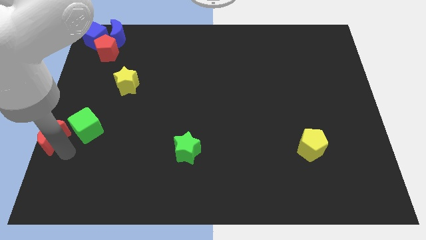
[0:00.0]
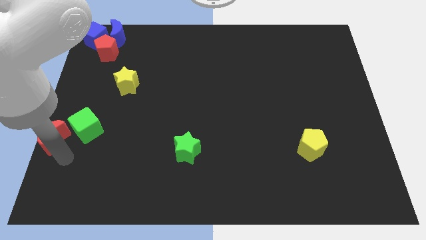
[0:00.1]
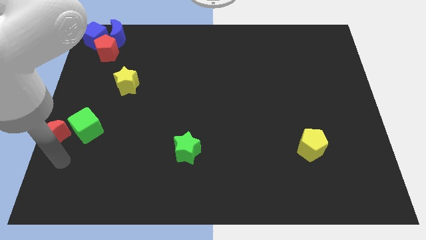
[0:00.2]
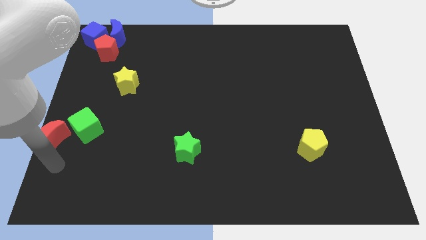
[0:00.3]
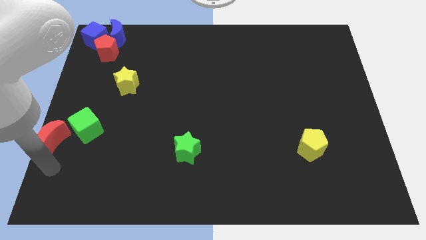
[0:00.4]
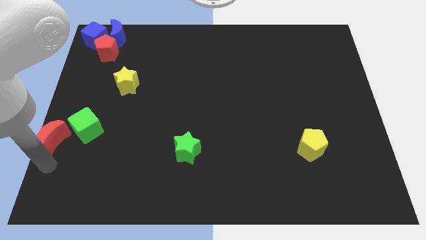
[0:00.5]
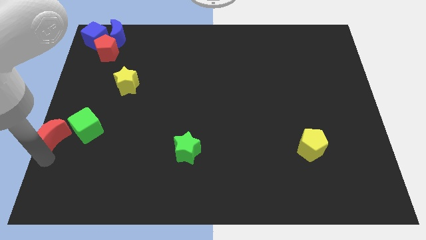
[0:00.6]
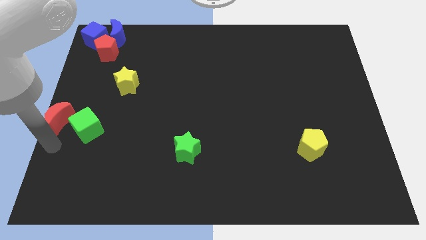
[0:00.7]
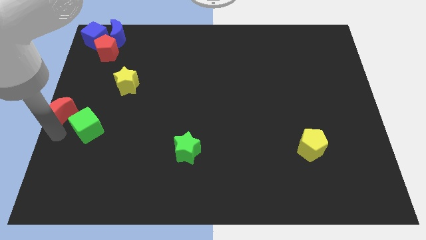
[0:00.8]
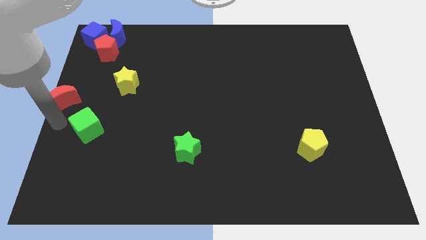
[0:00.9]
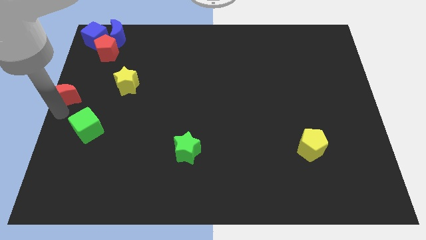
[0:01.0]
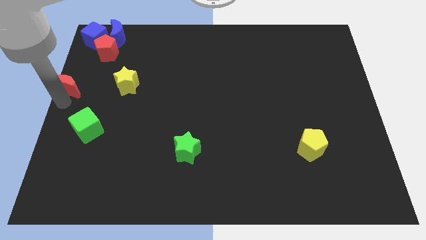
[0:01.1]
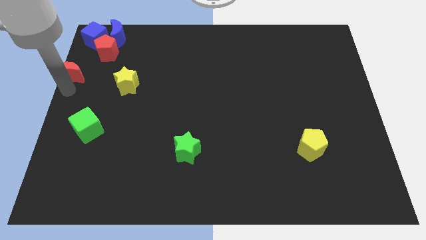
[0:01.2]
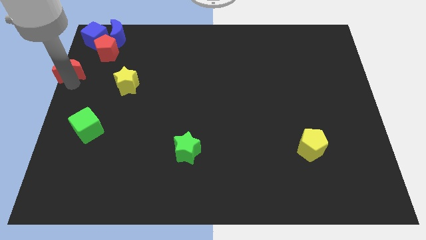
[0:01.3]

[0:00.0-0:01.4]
move the red crescent to the top of the board

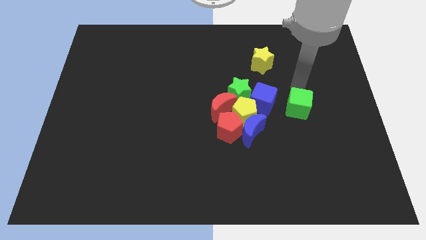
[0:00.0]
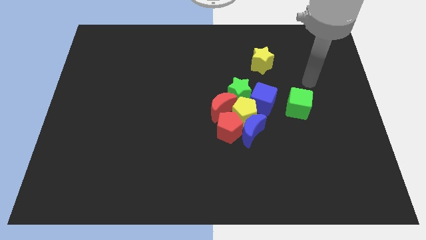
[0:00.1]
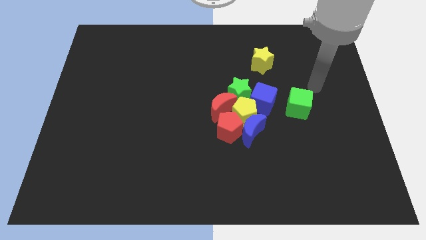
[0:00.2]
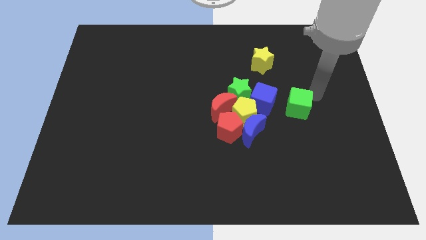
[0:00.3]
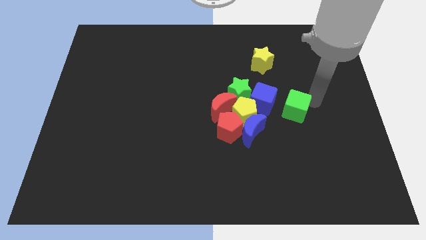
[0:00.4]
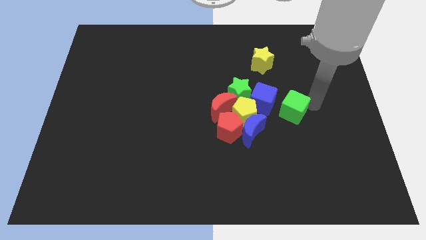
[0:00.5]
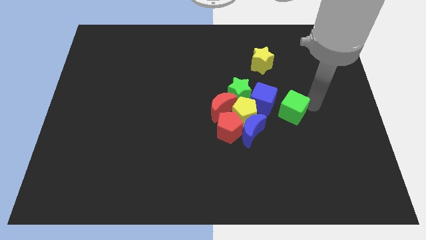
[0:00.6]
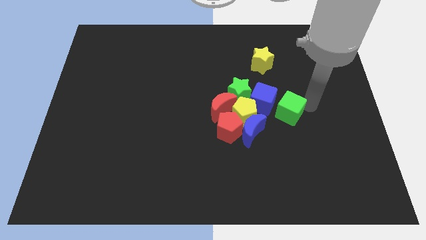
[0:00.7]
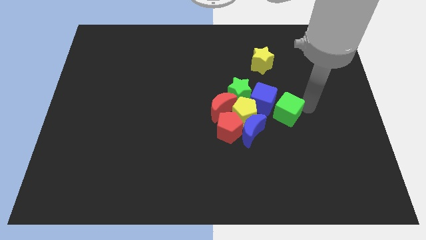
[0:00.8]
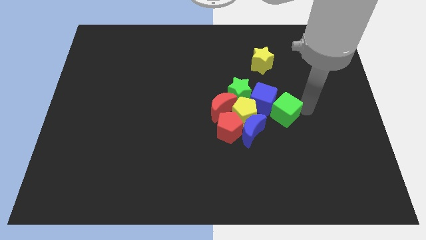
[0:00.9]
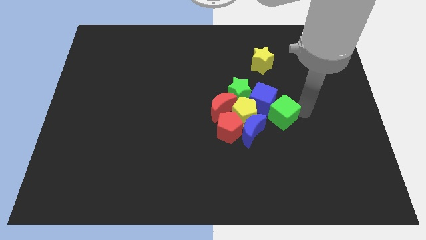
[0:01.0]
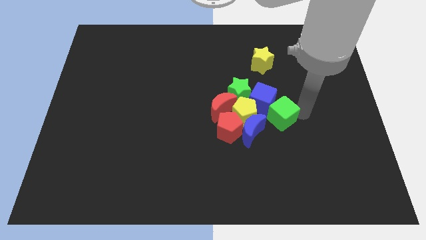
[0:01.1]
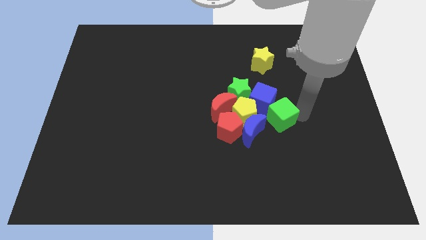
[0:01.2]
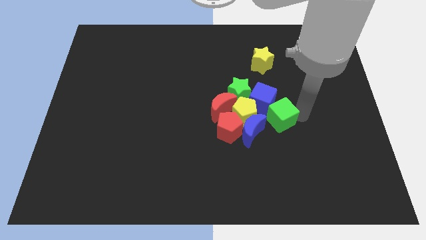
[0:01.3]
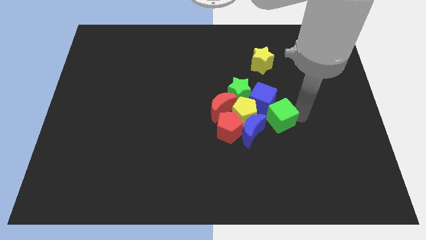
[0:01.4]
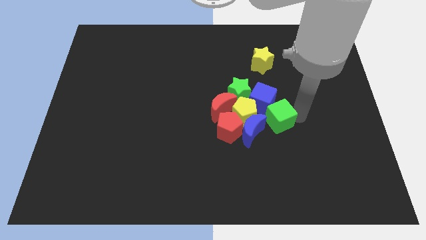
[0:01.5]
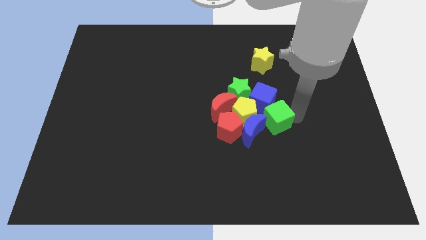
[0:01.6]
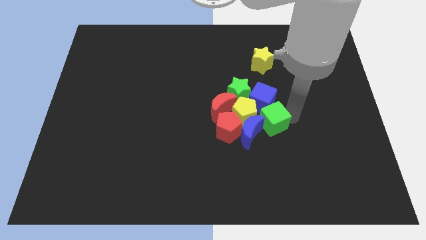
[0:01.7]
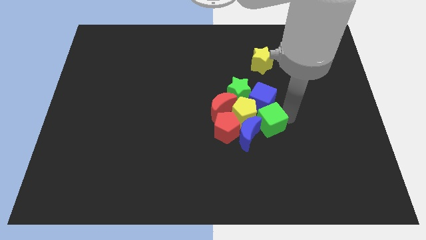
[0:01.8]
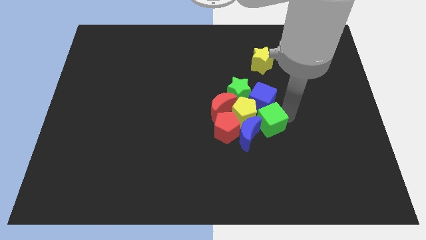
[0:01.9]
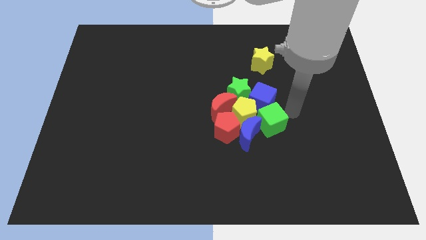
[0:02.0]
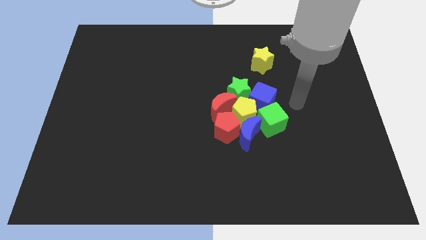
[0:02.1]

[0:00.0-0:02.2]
place the green cube in between the blue blocks

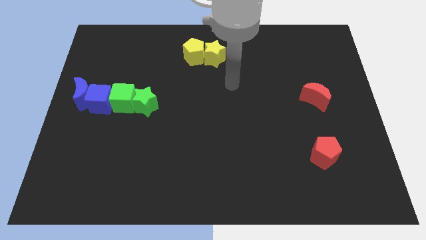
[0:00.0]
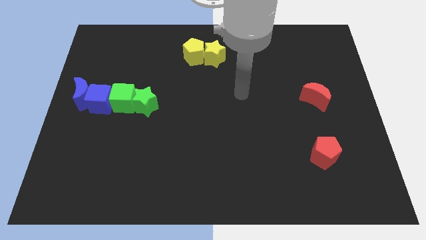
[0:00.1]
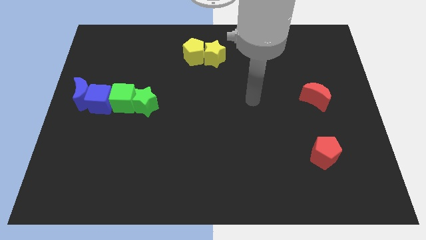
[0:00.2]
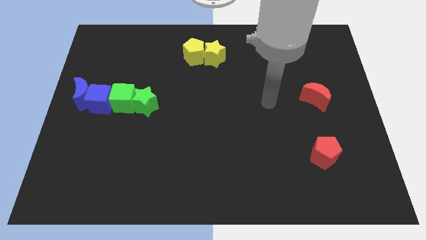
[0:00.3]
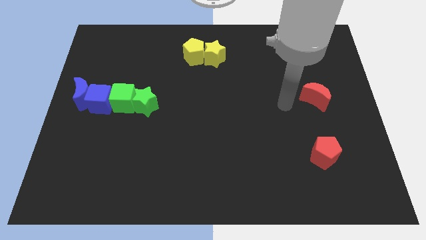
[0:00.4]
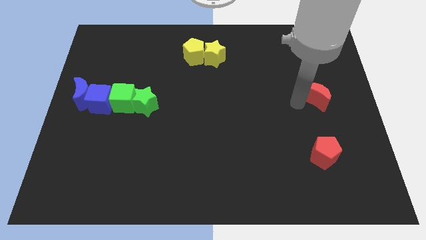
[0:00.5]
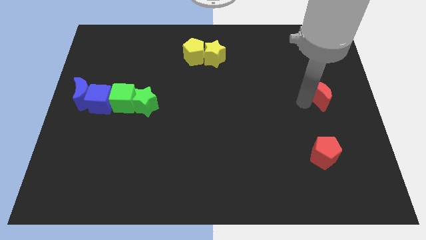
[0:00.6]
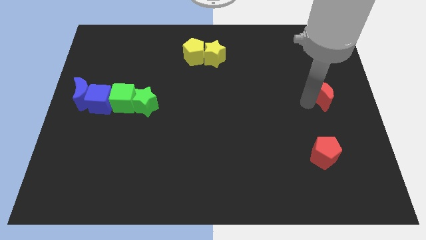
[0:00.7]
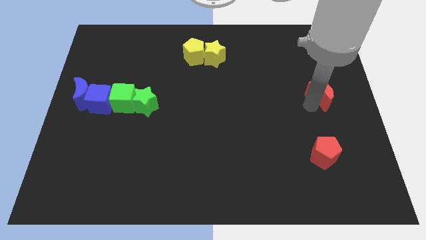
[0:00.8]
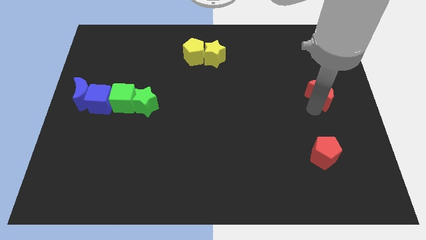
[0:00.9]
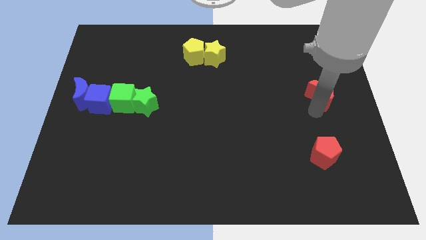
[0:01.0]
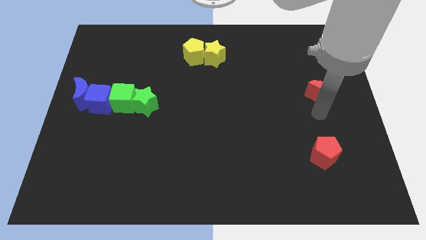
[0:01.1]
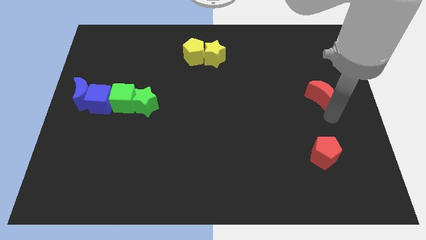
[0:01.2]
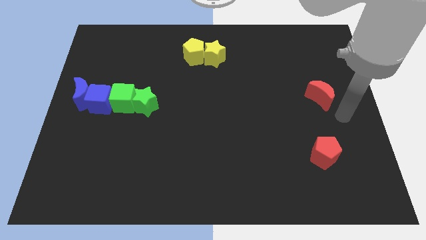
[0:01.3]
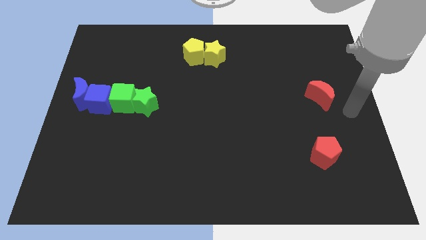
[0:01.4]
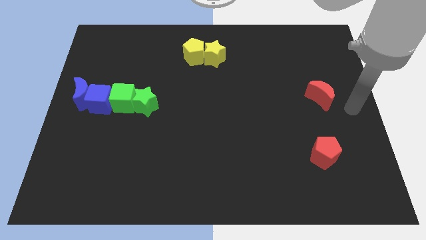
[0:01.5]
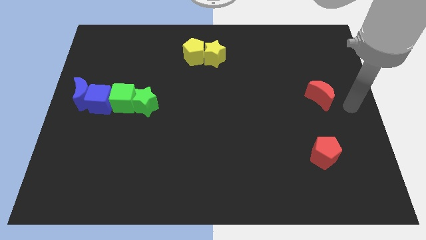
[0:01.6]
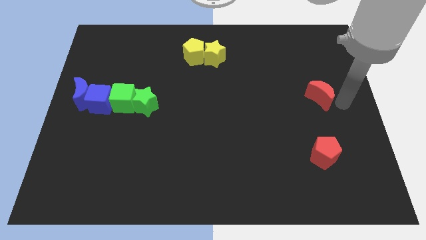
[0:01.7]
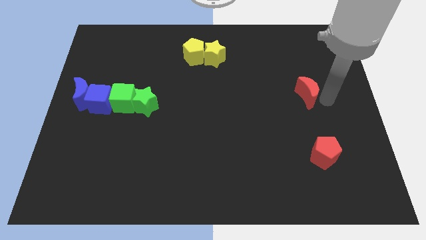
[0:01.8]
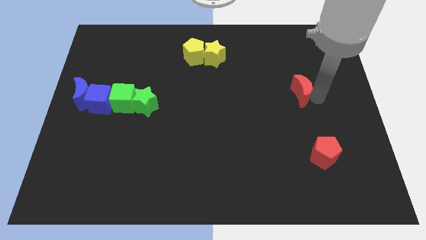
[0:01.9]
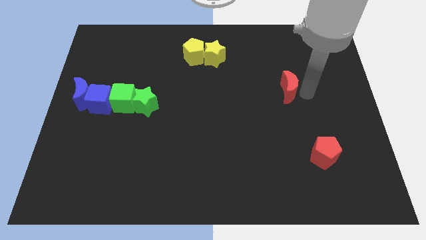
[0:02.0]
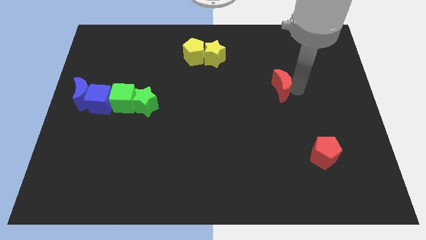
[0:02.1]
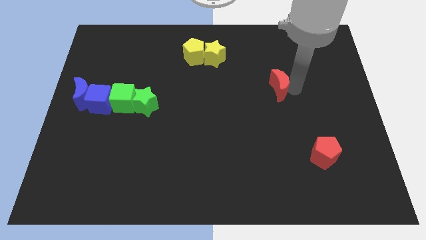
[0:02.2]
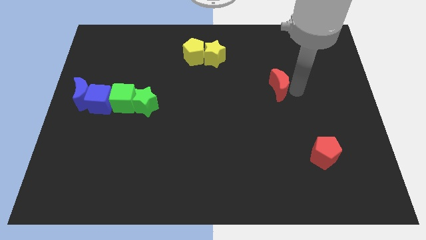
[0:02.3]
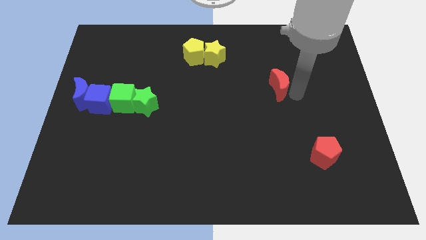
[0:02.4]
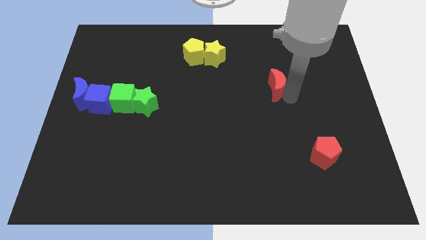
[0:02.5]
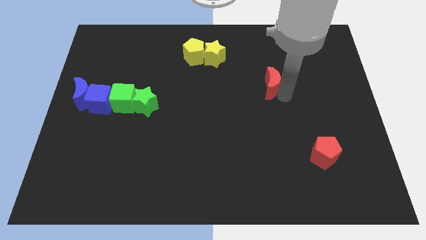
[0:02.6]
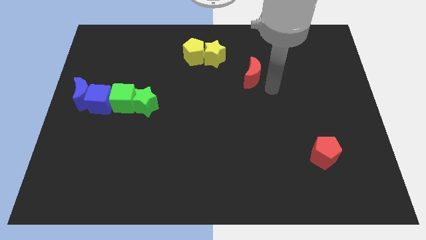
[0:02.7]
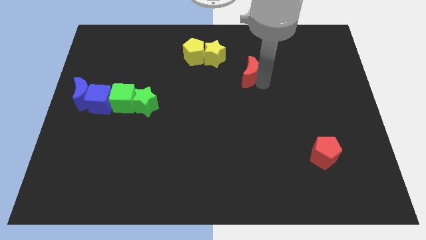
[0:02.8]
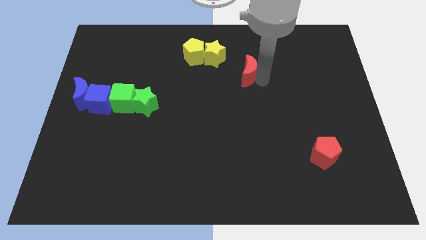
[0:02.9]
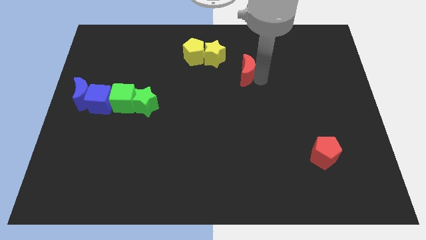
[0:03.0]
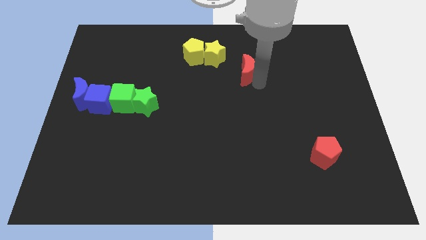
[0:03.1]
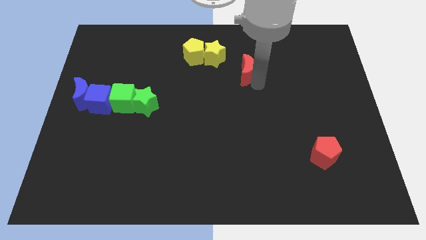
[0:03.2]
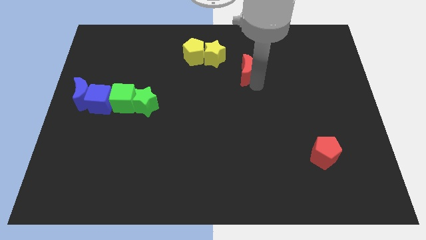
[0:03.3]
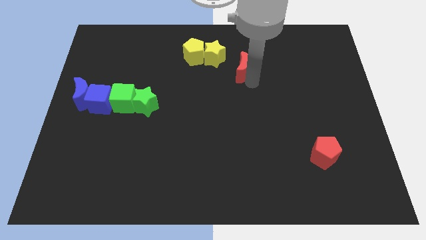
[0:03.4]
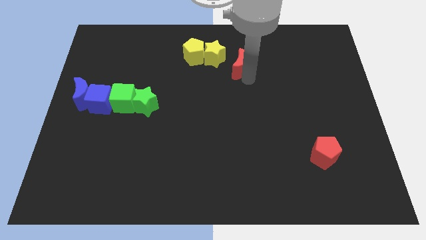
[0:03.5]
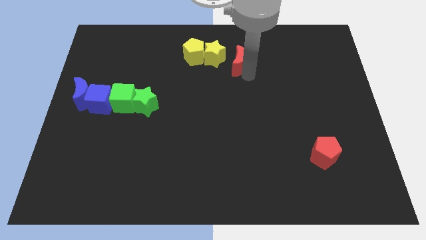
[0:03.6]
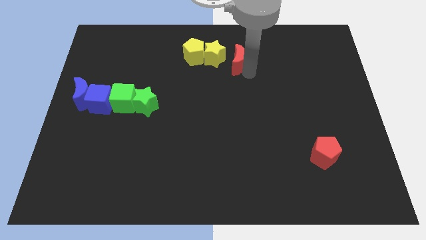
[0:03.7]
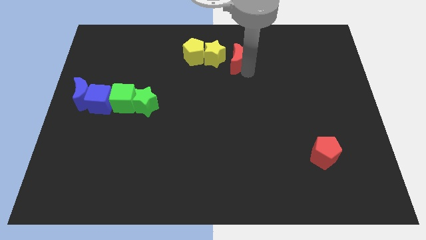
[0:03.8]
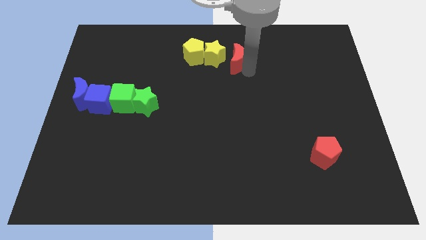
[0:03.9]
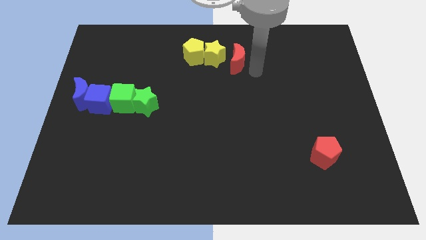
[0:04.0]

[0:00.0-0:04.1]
push red moon towards yellow star

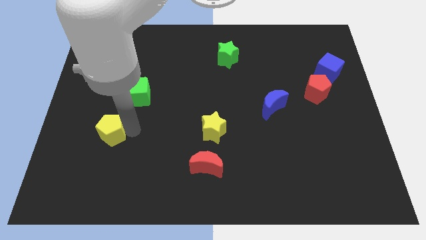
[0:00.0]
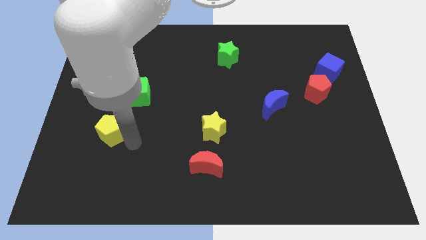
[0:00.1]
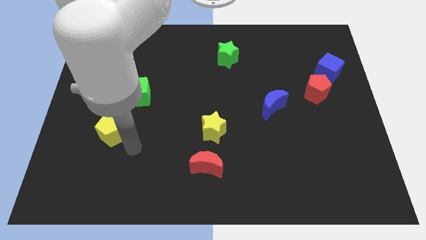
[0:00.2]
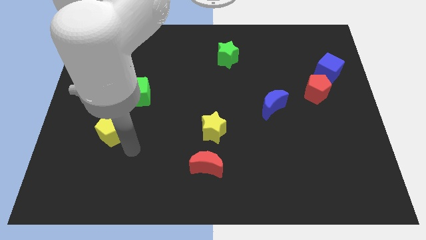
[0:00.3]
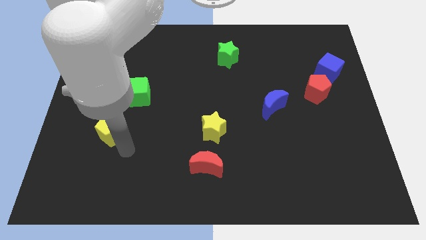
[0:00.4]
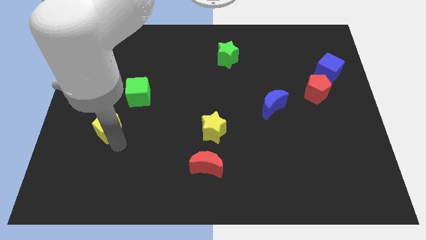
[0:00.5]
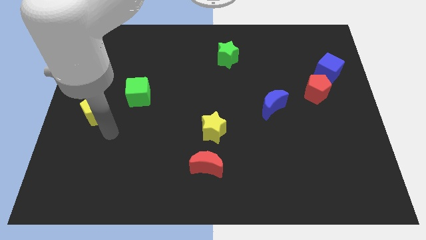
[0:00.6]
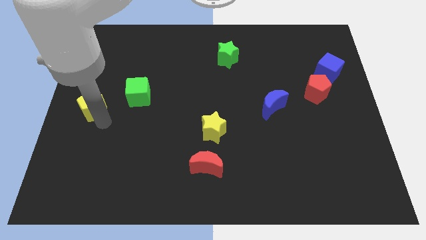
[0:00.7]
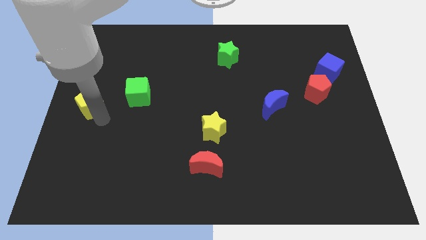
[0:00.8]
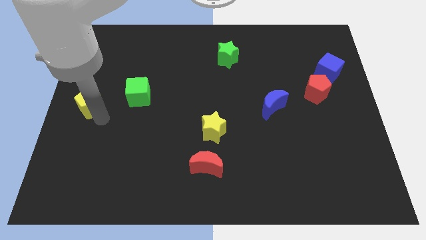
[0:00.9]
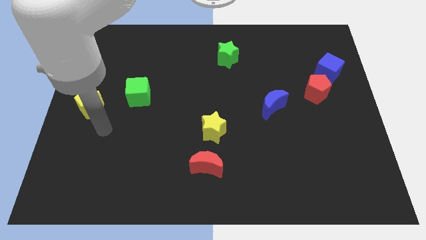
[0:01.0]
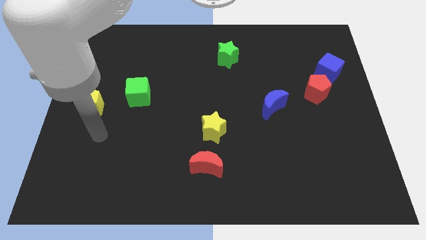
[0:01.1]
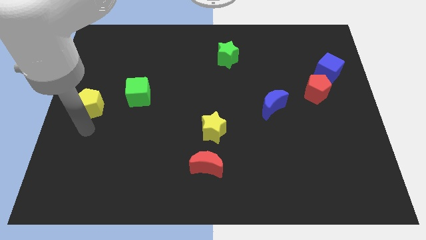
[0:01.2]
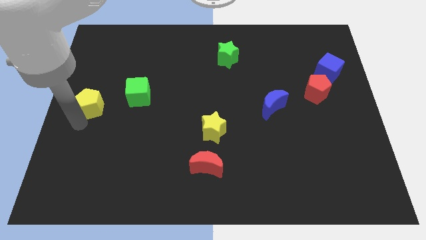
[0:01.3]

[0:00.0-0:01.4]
move the yellow pentagon to the left center to the green cube

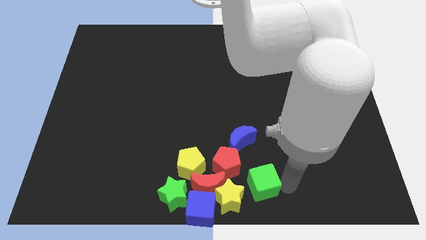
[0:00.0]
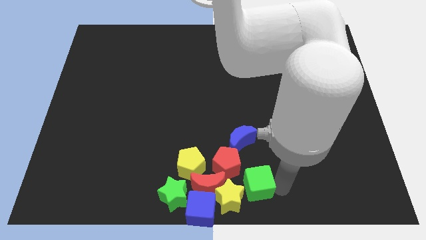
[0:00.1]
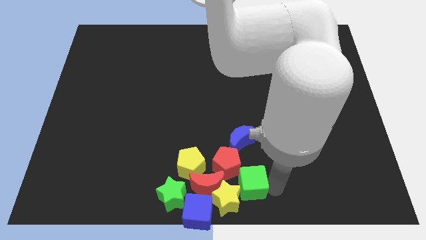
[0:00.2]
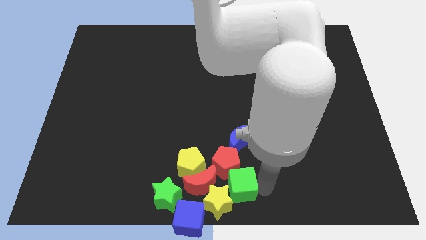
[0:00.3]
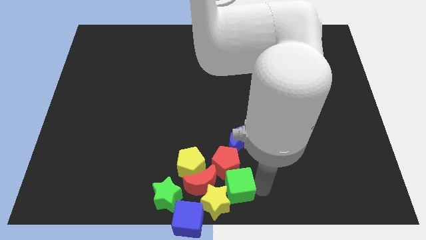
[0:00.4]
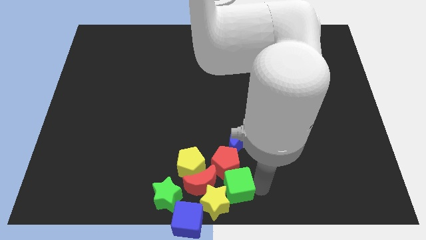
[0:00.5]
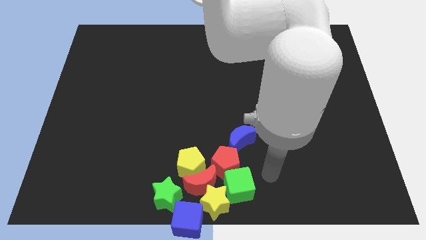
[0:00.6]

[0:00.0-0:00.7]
place green cube below red pentagon
